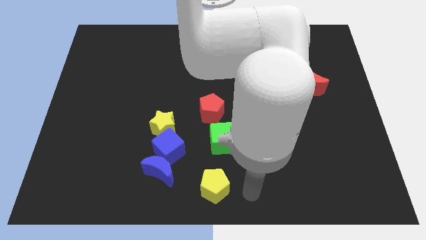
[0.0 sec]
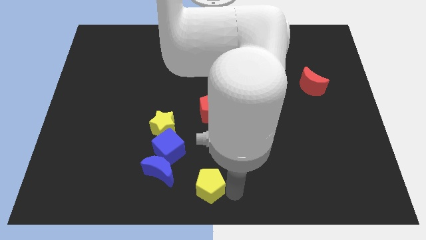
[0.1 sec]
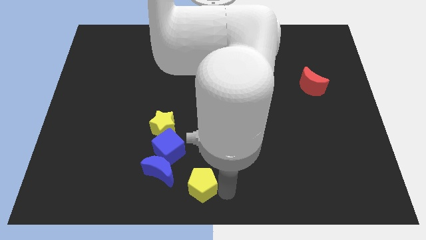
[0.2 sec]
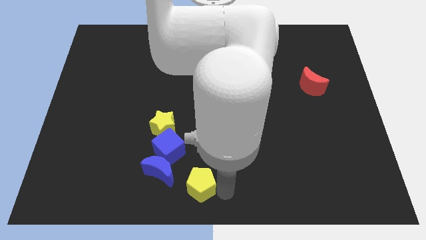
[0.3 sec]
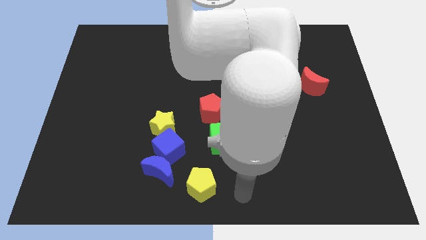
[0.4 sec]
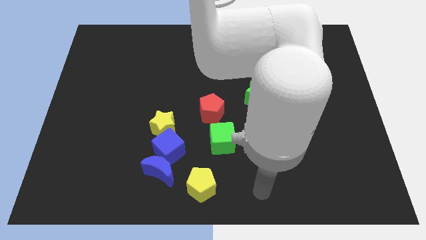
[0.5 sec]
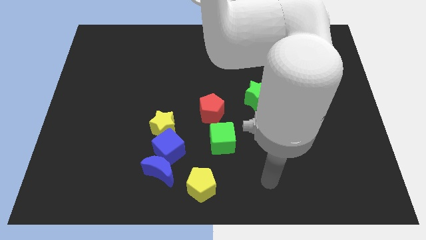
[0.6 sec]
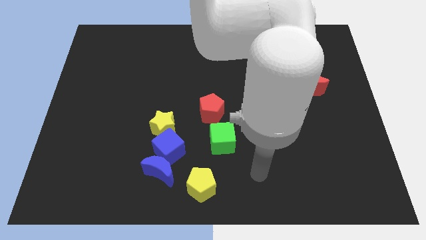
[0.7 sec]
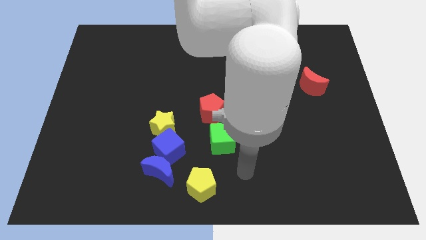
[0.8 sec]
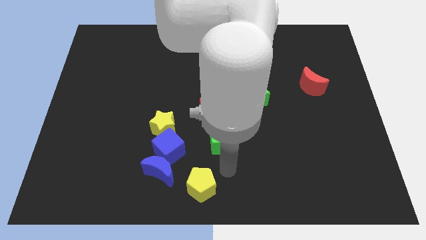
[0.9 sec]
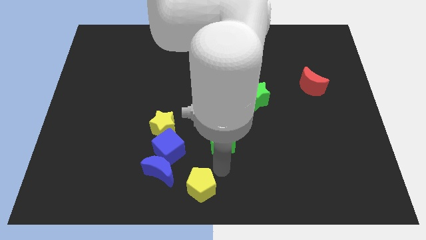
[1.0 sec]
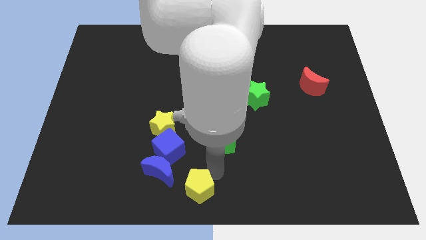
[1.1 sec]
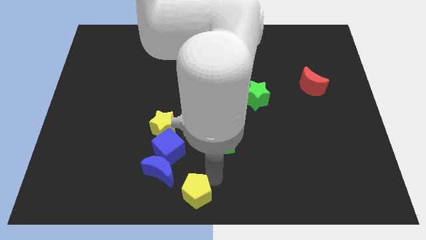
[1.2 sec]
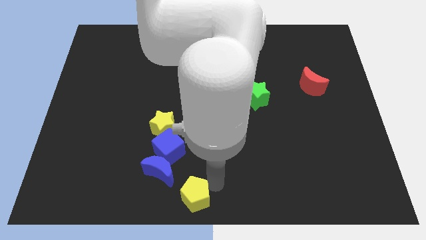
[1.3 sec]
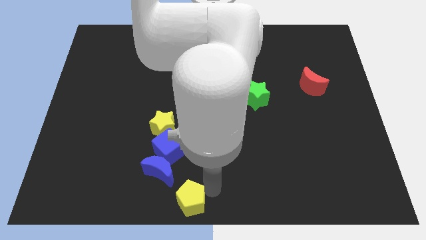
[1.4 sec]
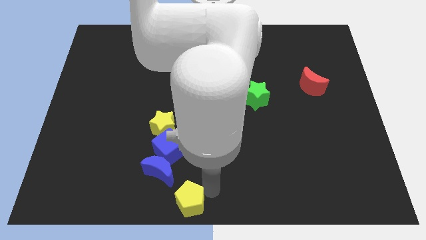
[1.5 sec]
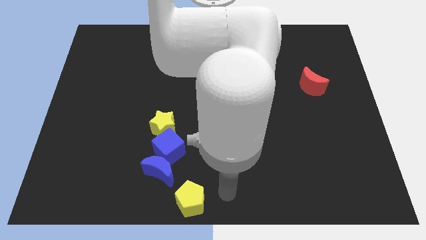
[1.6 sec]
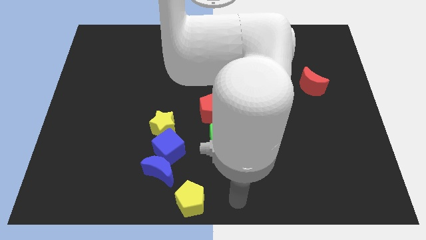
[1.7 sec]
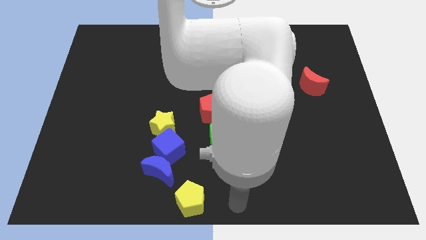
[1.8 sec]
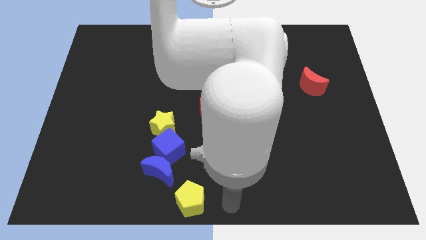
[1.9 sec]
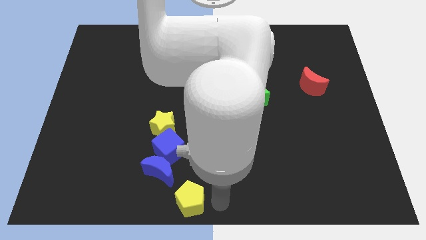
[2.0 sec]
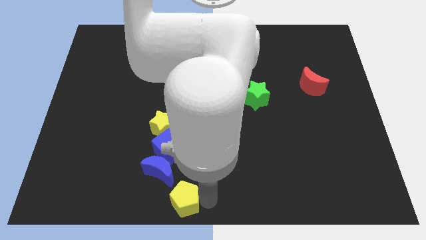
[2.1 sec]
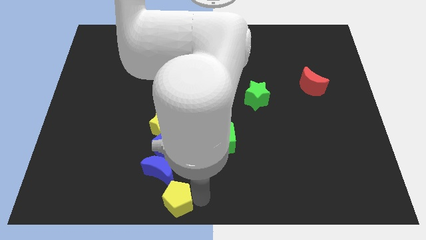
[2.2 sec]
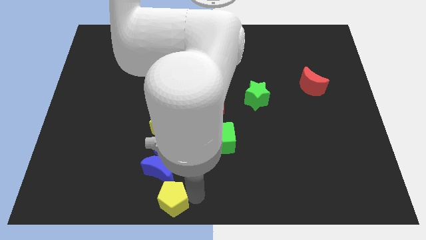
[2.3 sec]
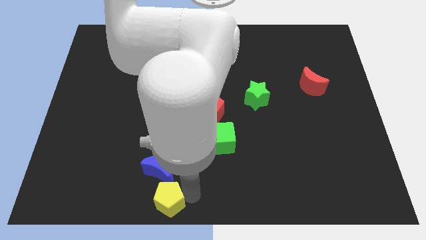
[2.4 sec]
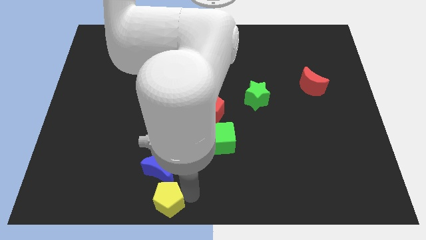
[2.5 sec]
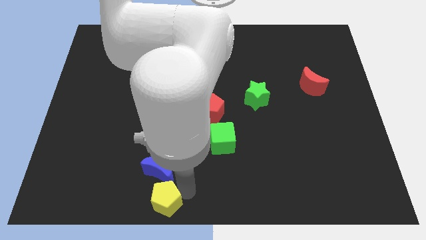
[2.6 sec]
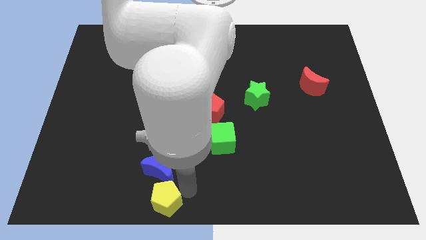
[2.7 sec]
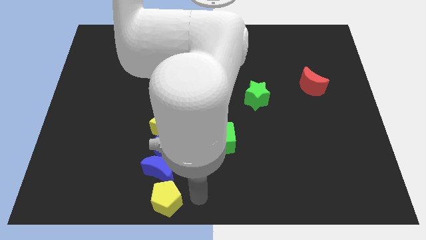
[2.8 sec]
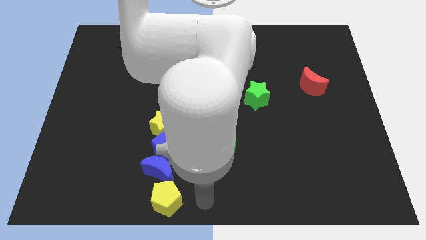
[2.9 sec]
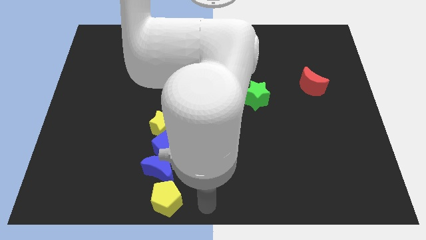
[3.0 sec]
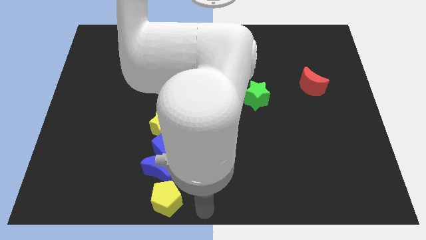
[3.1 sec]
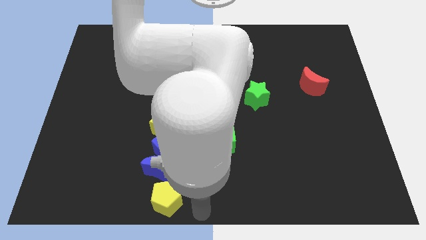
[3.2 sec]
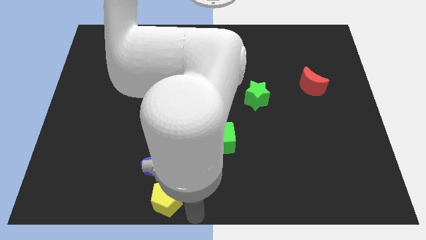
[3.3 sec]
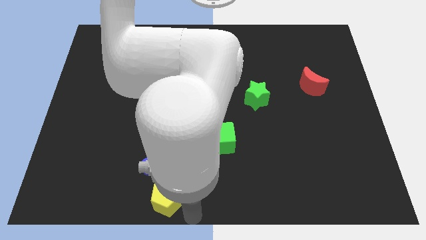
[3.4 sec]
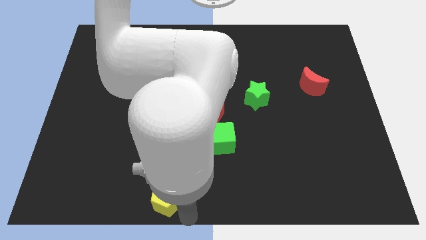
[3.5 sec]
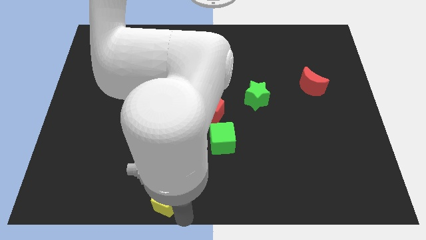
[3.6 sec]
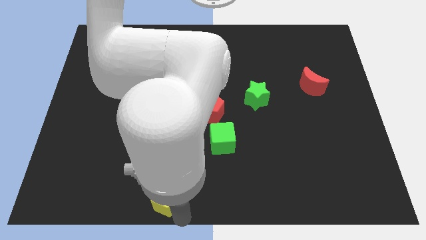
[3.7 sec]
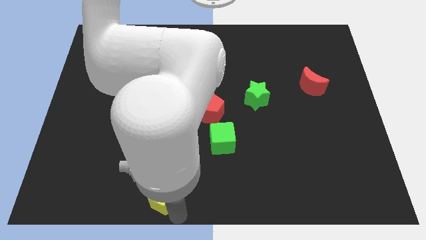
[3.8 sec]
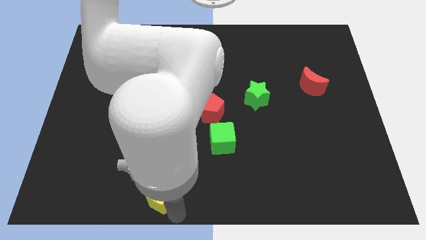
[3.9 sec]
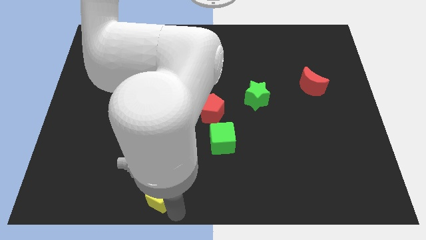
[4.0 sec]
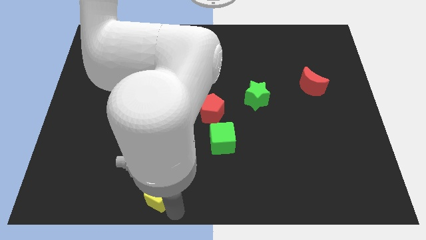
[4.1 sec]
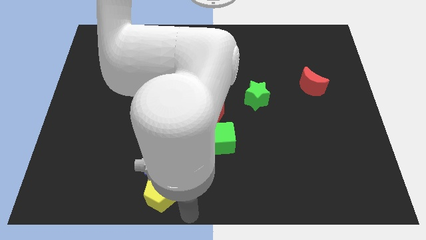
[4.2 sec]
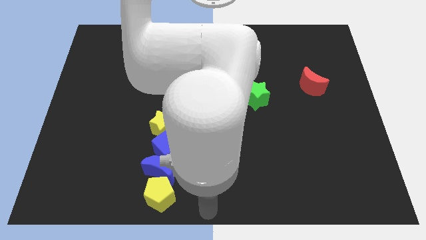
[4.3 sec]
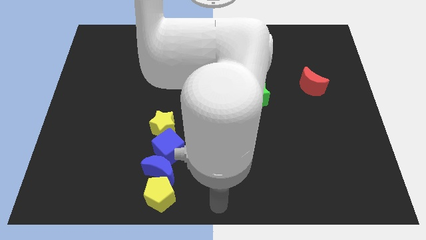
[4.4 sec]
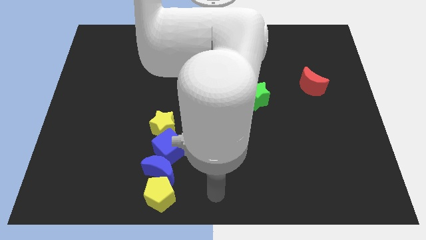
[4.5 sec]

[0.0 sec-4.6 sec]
put the yellow pentagon below to the blue crescent to the board

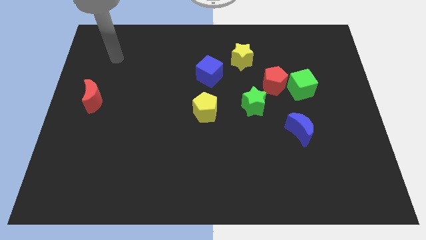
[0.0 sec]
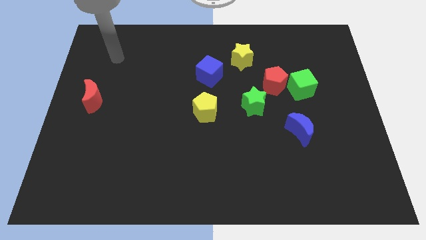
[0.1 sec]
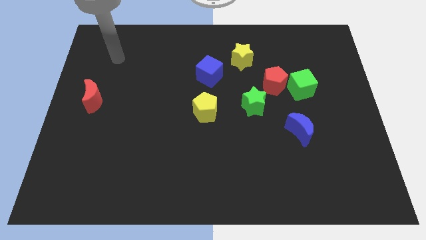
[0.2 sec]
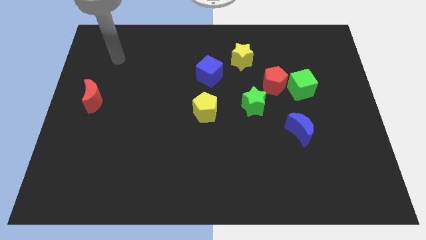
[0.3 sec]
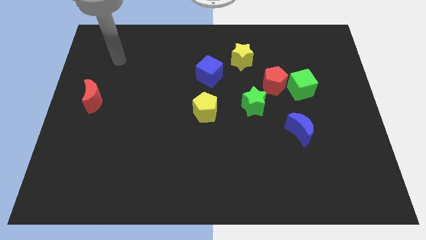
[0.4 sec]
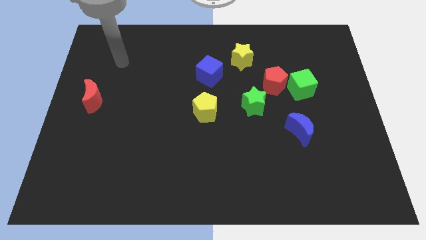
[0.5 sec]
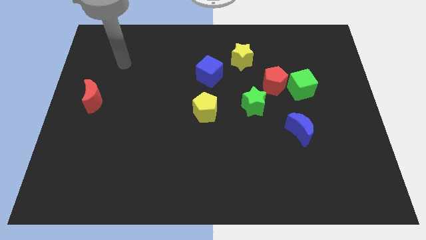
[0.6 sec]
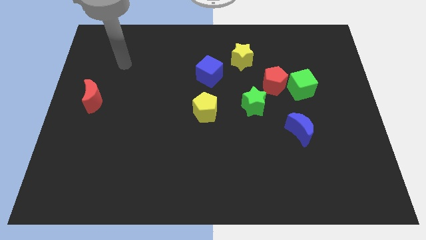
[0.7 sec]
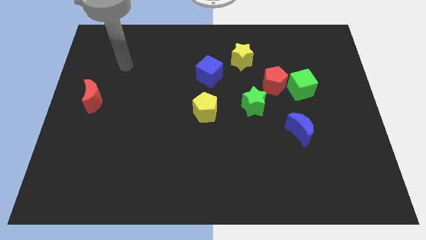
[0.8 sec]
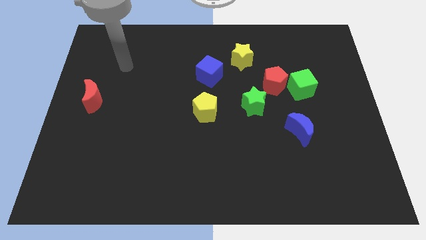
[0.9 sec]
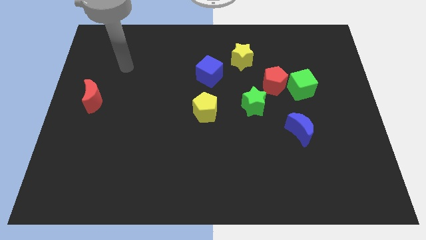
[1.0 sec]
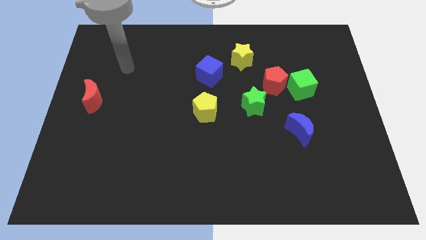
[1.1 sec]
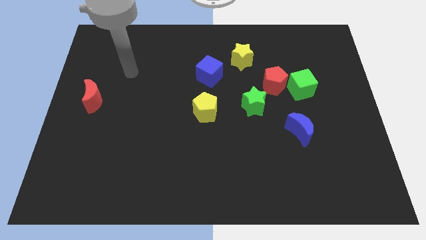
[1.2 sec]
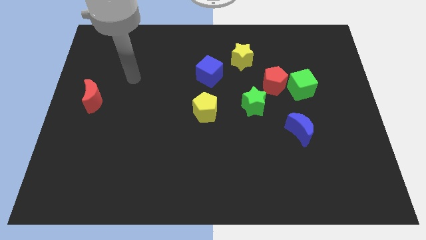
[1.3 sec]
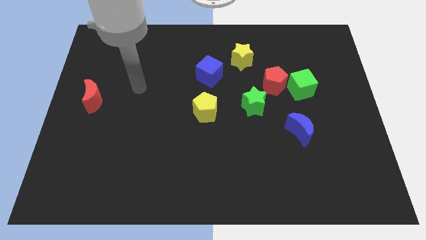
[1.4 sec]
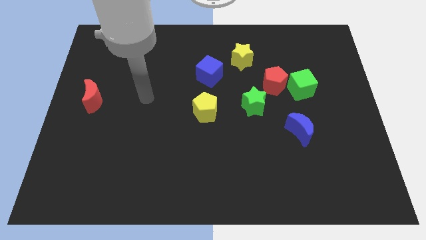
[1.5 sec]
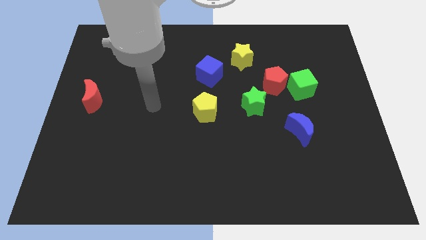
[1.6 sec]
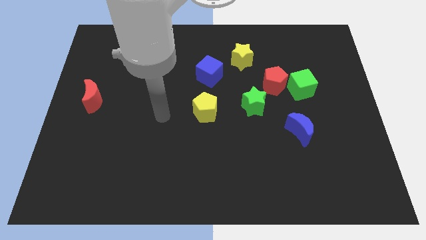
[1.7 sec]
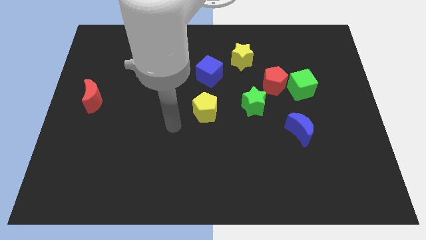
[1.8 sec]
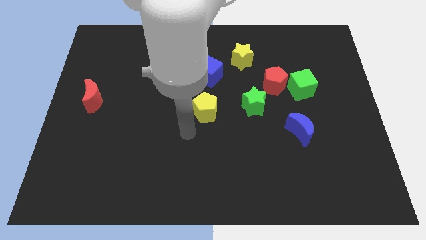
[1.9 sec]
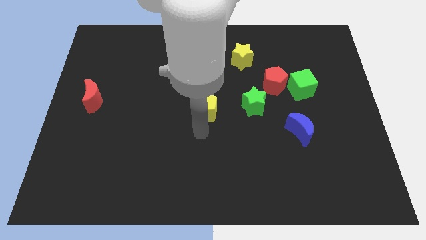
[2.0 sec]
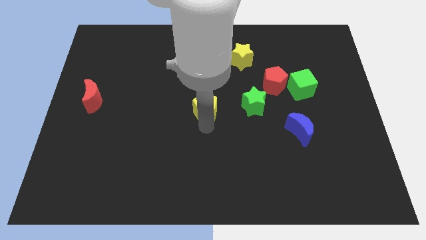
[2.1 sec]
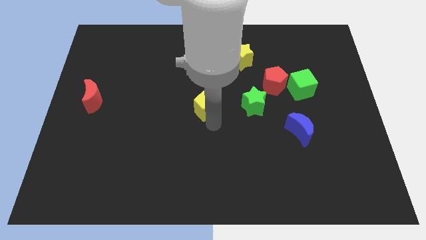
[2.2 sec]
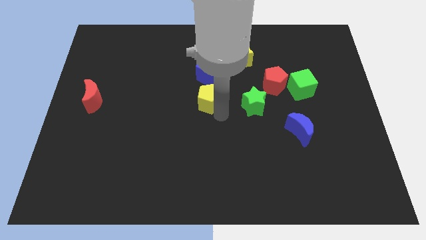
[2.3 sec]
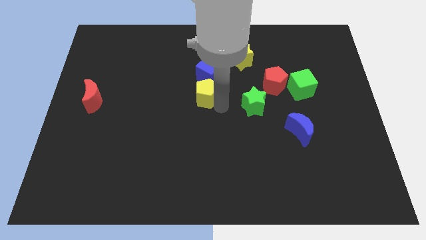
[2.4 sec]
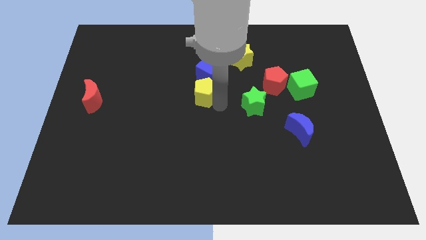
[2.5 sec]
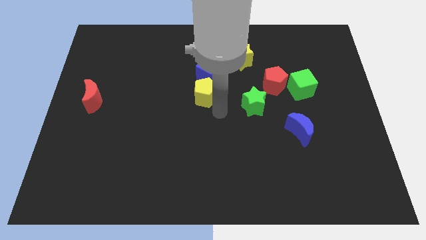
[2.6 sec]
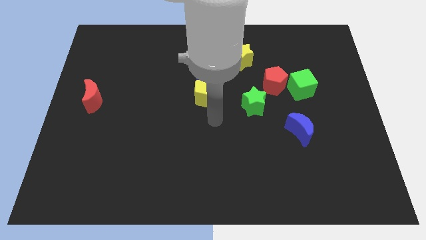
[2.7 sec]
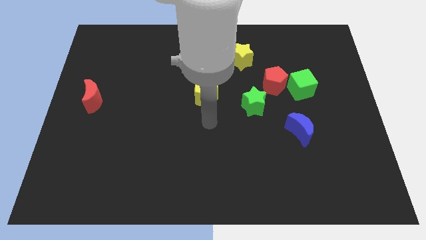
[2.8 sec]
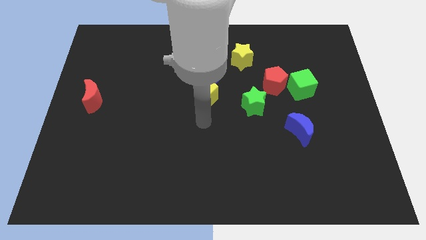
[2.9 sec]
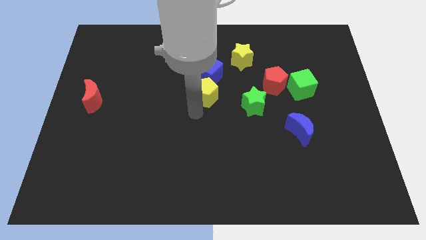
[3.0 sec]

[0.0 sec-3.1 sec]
slide the yellow pentagon close to blue cube

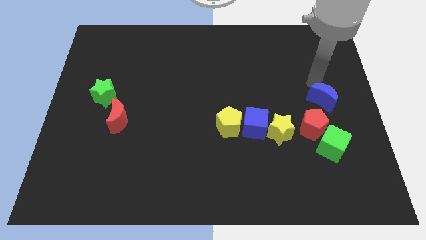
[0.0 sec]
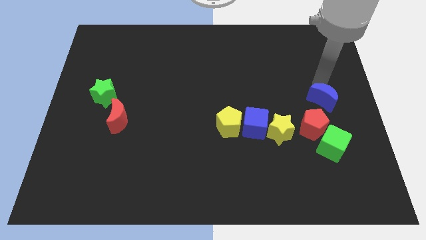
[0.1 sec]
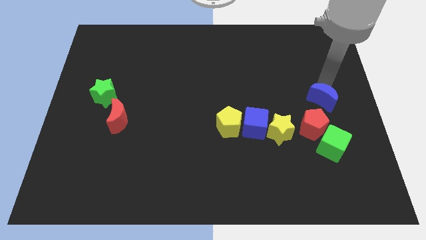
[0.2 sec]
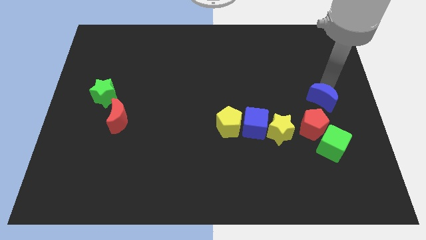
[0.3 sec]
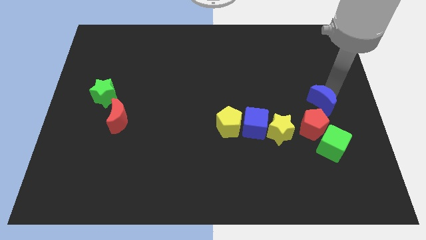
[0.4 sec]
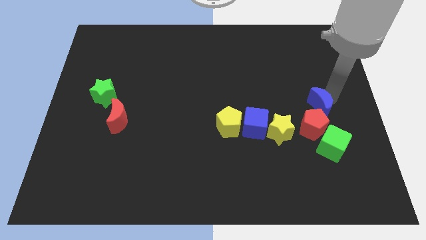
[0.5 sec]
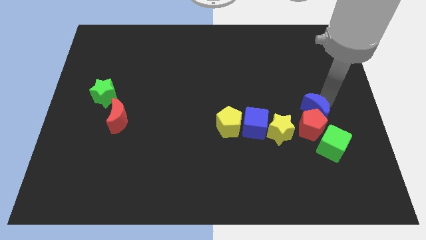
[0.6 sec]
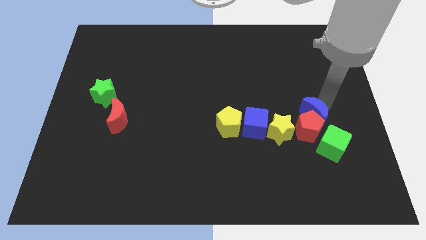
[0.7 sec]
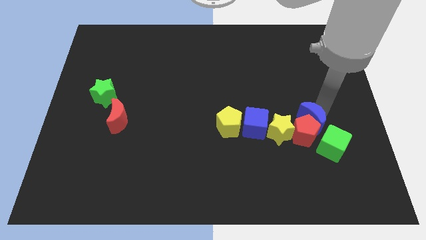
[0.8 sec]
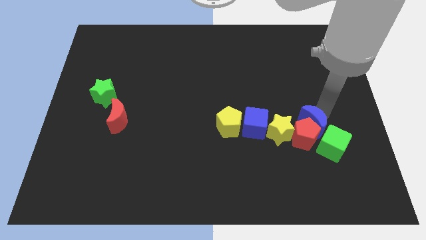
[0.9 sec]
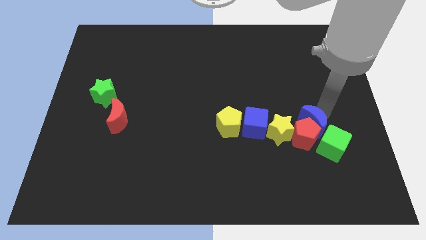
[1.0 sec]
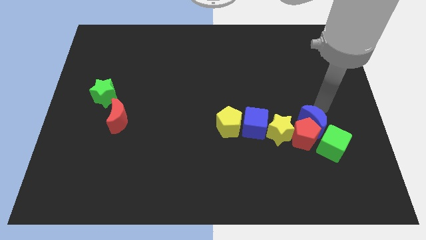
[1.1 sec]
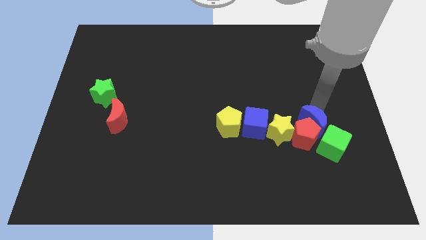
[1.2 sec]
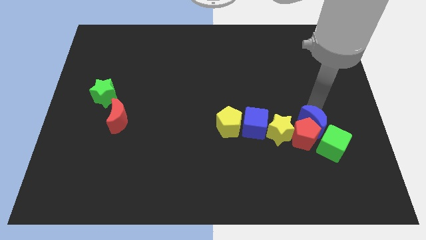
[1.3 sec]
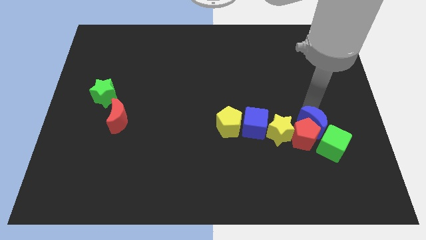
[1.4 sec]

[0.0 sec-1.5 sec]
move the blue crescent into the red pentagon
